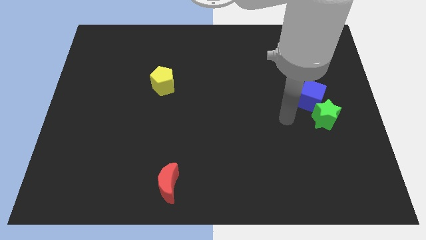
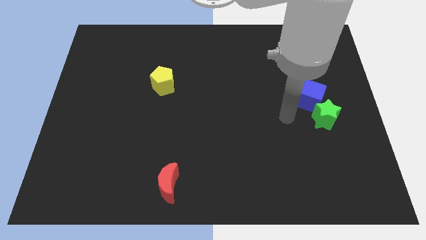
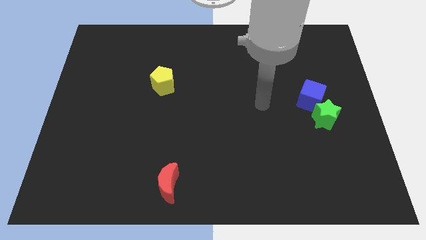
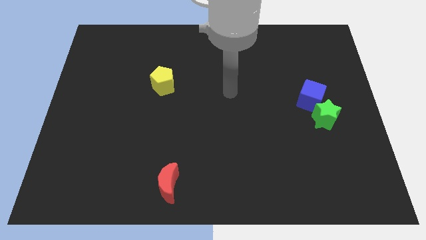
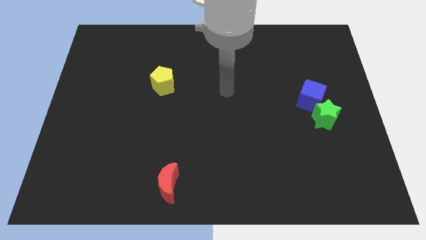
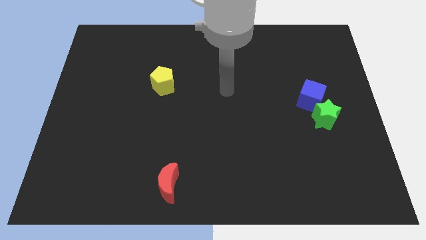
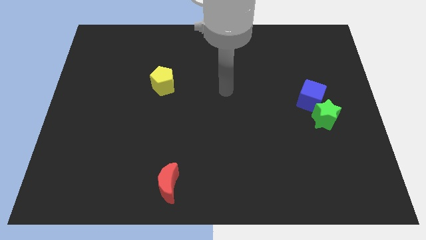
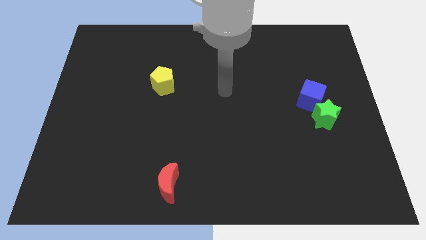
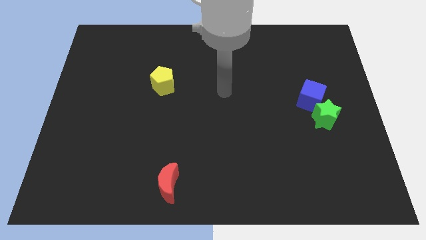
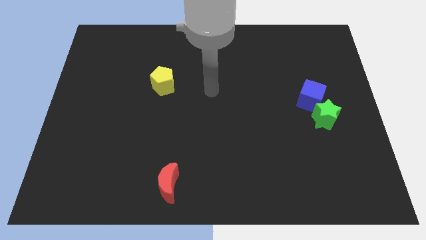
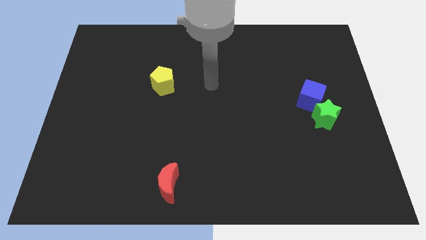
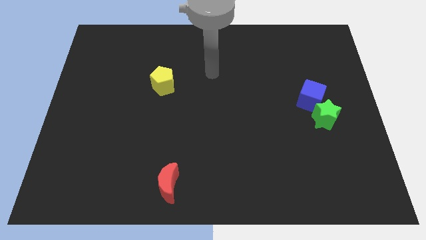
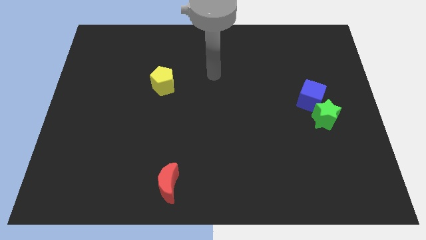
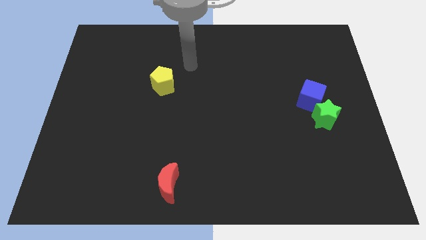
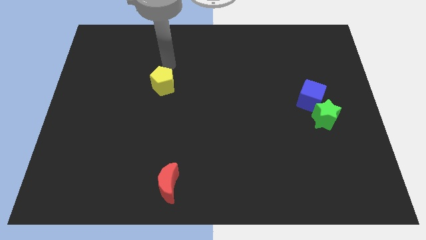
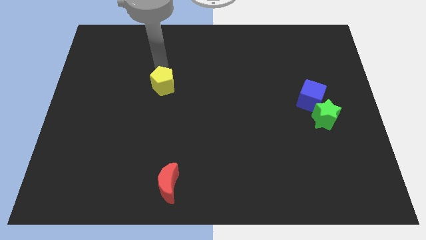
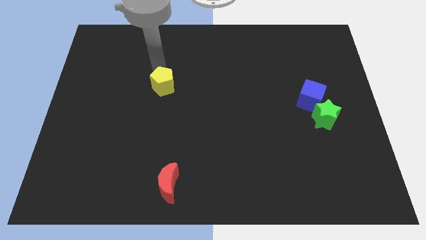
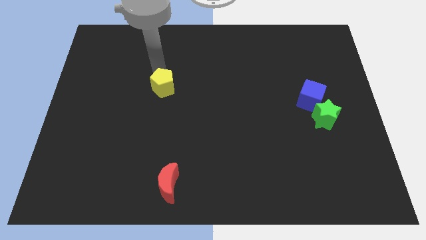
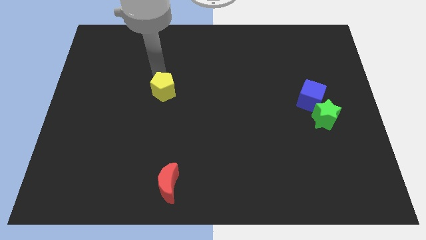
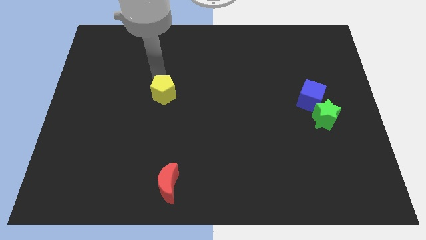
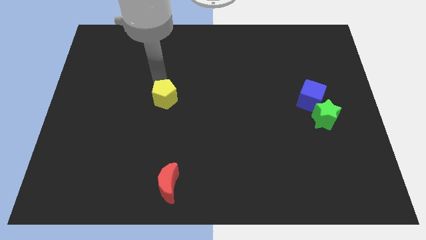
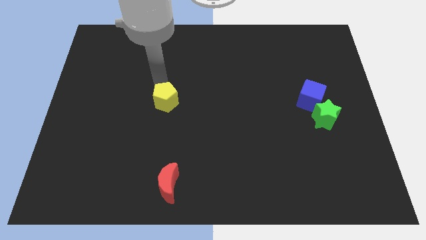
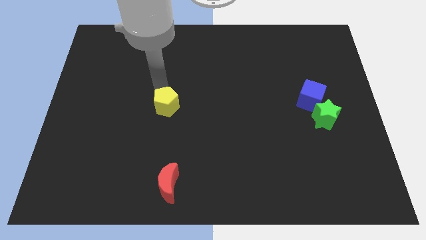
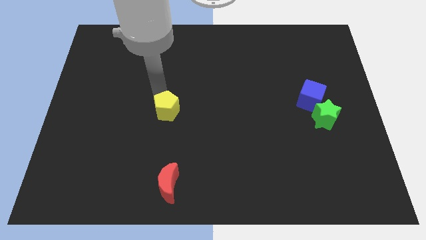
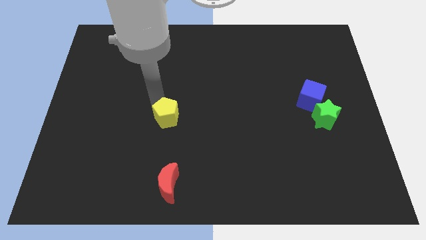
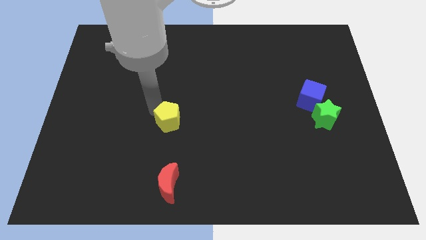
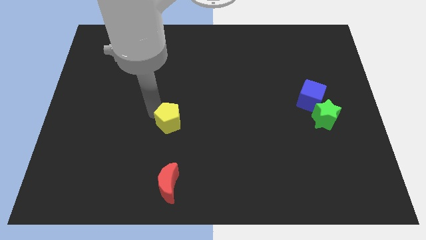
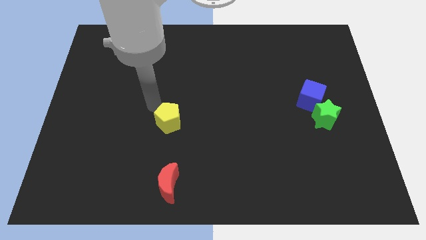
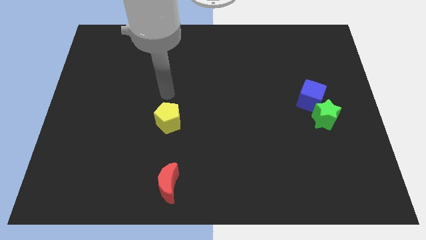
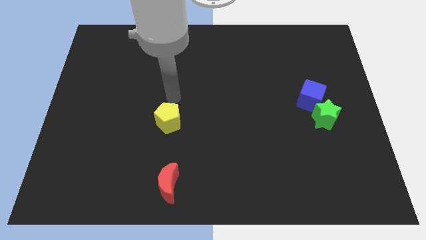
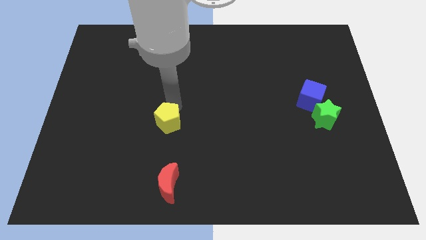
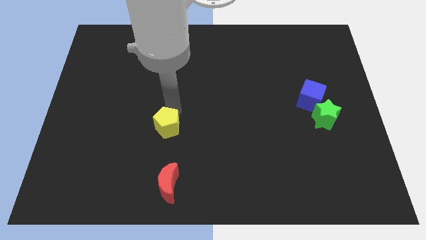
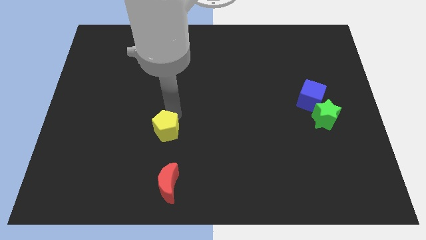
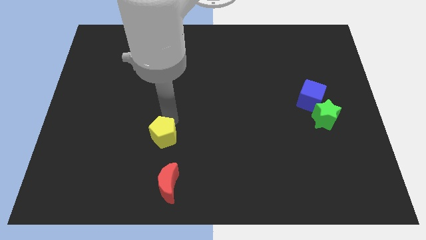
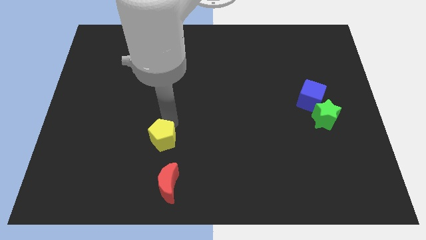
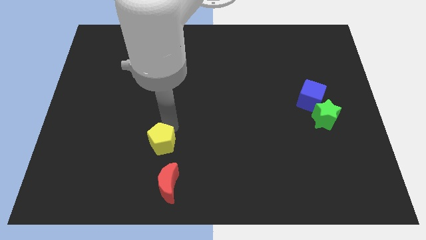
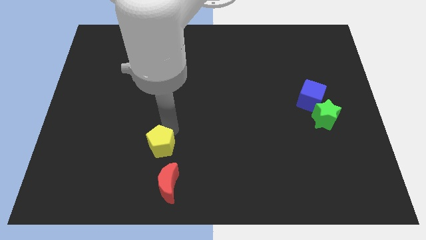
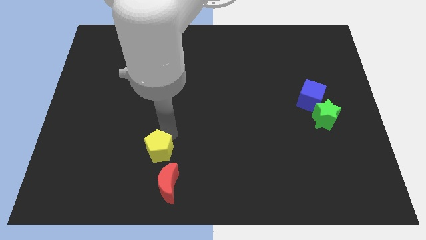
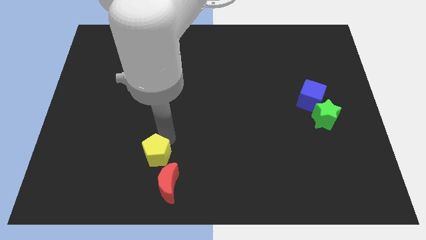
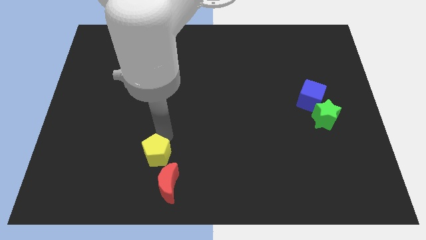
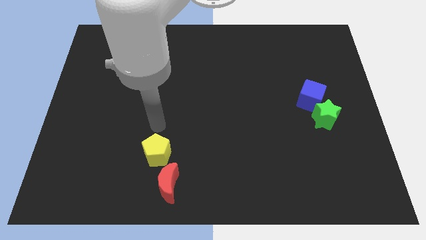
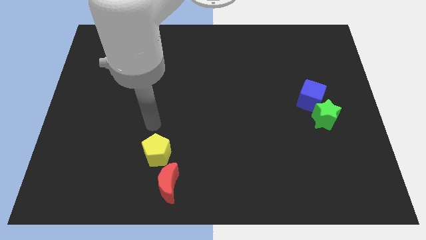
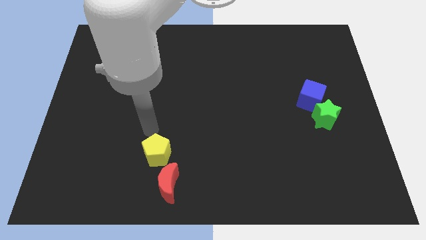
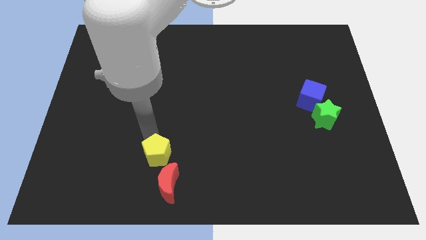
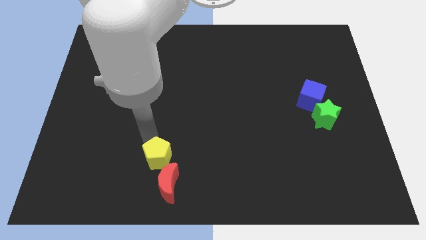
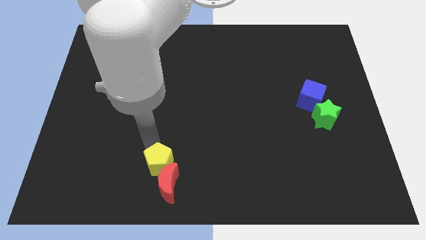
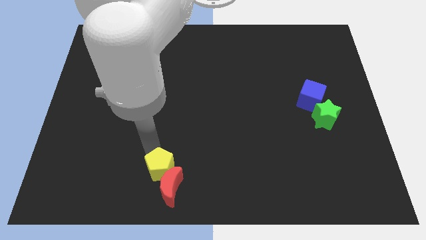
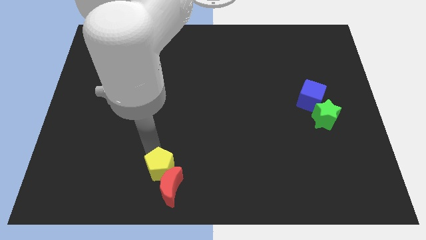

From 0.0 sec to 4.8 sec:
move the yellow block next to the moon

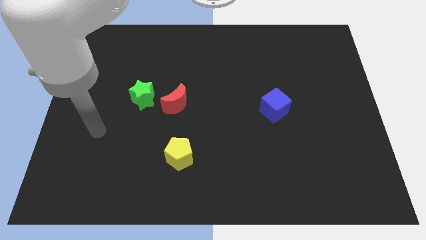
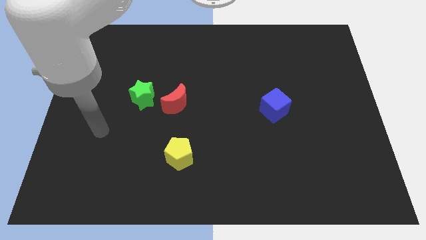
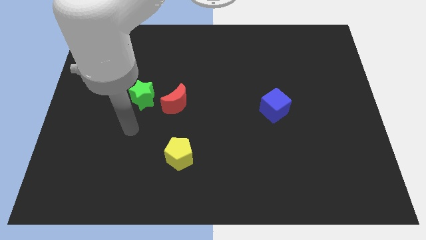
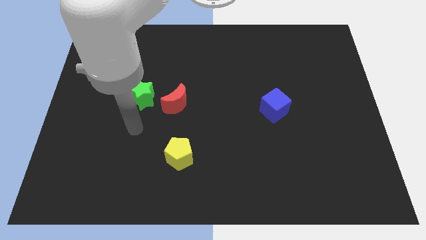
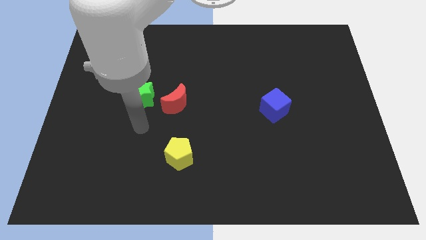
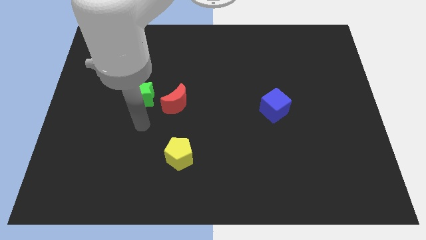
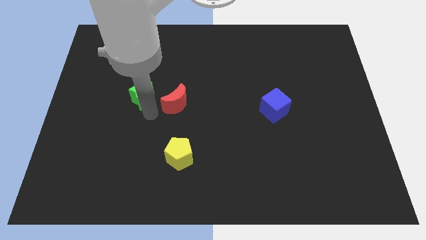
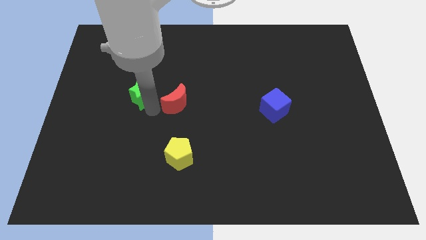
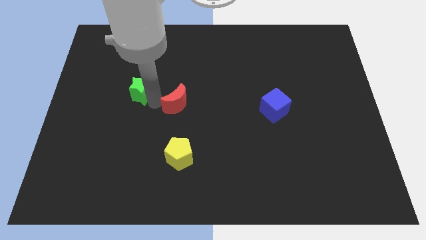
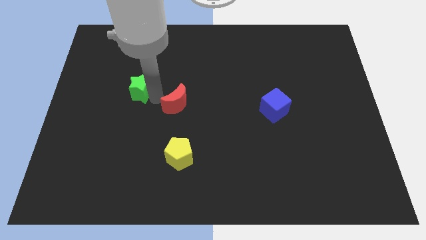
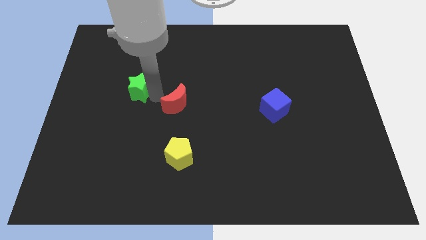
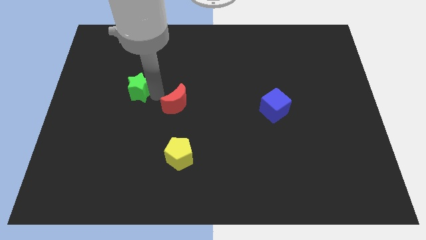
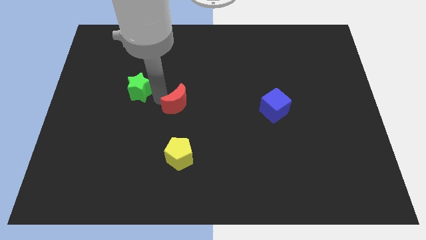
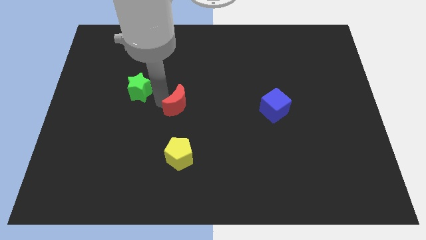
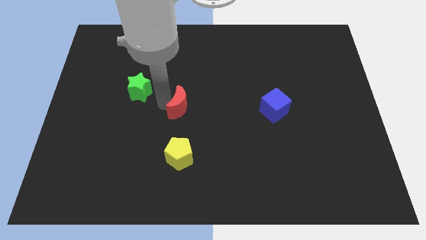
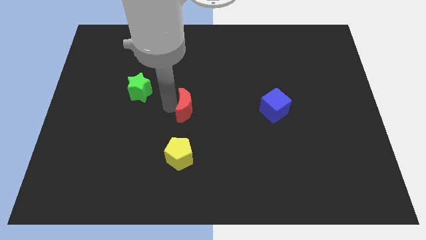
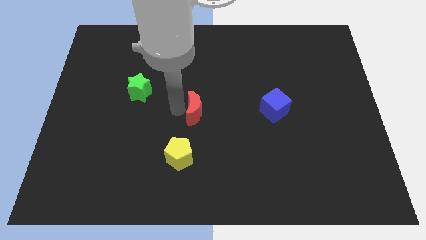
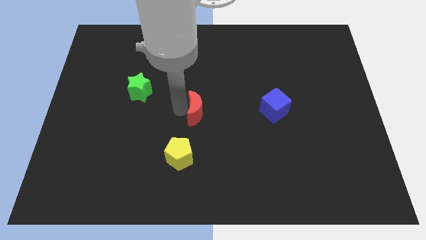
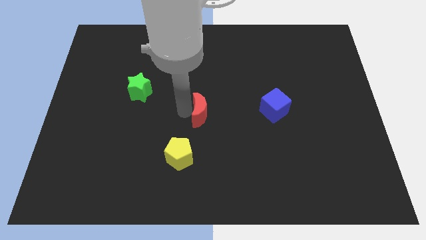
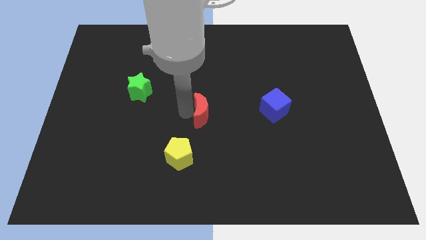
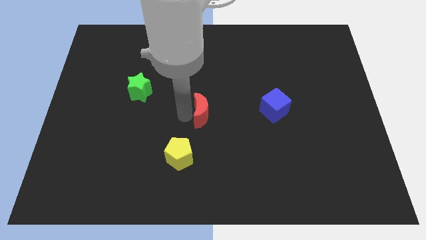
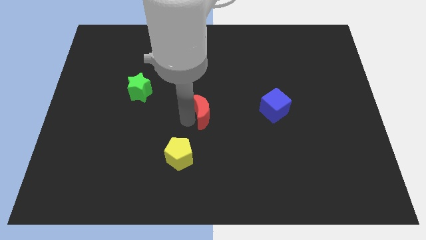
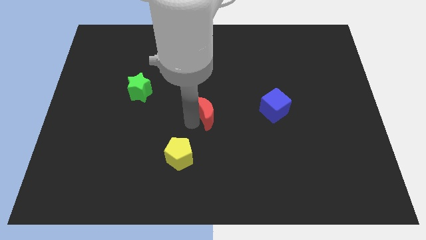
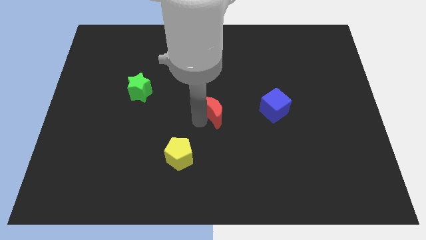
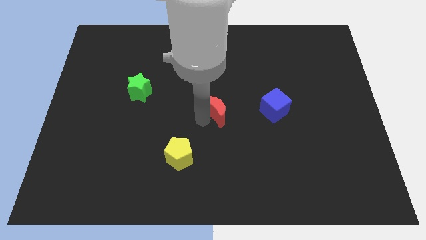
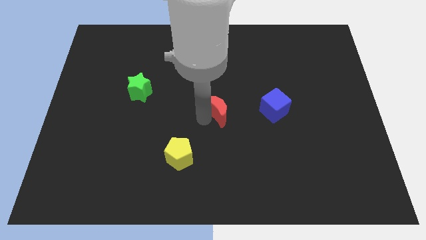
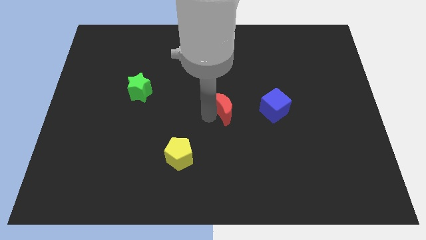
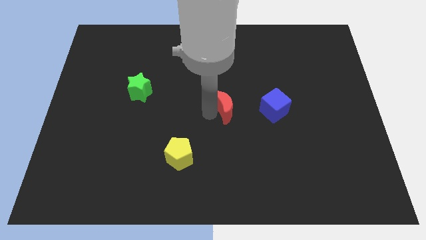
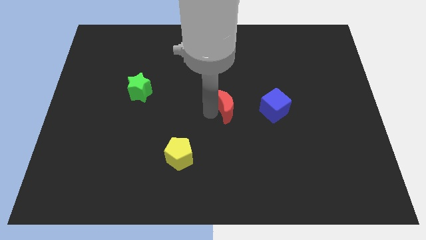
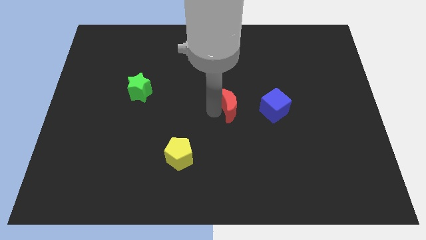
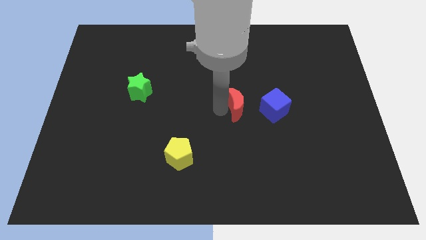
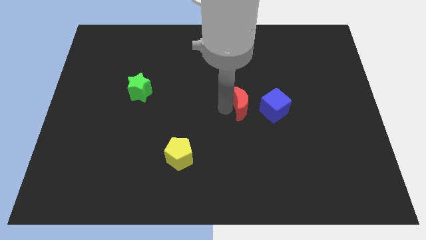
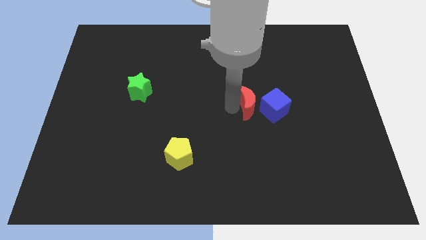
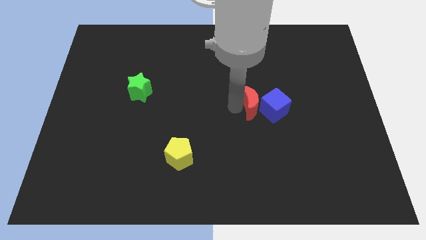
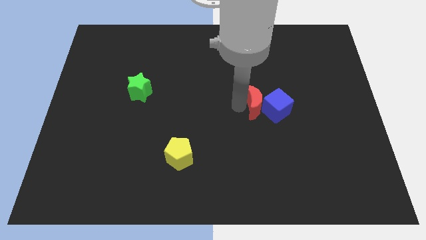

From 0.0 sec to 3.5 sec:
push the red moon next to the cube
